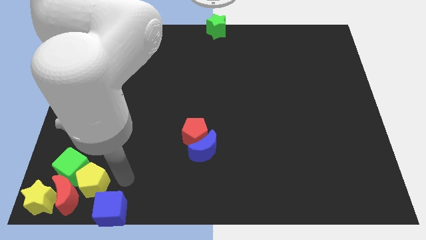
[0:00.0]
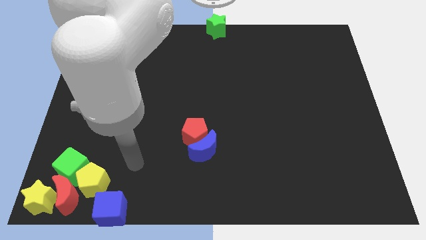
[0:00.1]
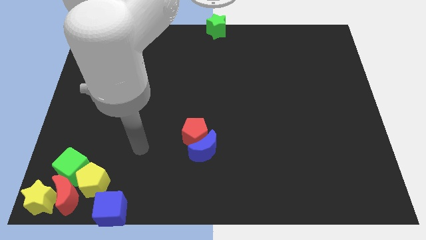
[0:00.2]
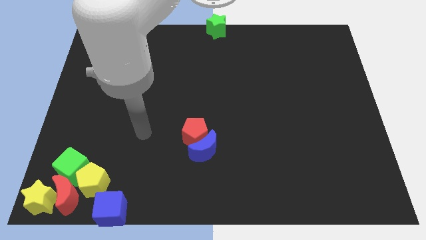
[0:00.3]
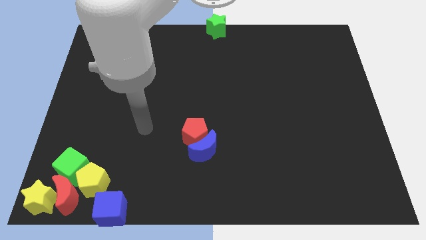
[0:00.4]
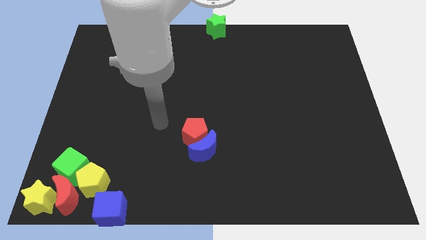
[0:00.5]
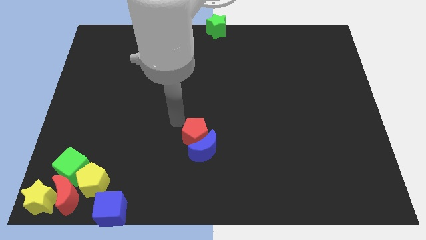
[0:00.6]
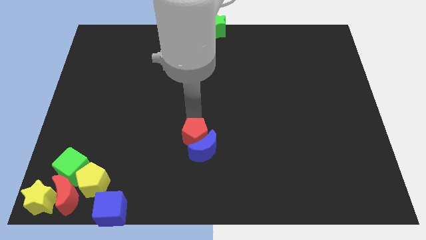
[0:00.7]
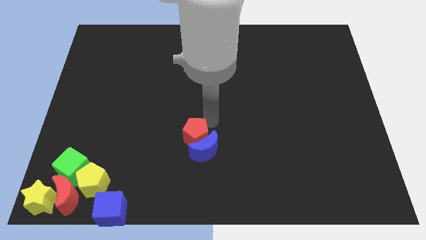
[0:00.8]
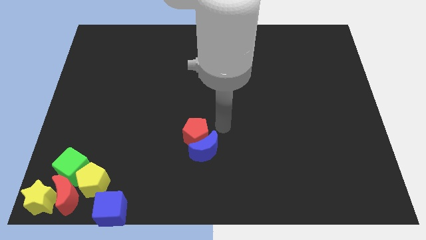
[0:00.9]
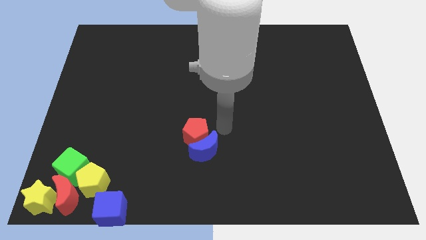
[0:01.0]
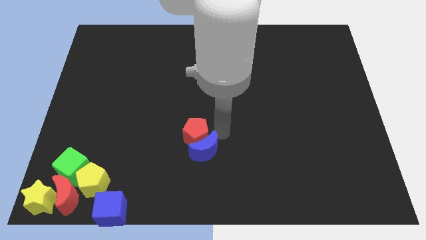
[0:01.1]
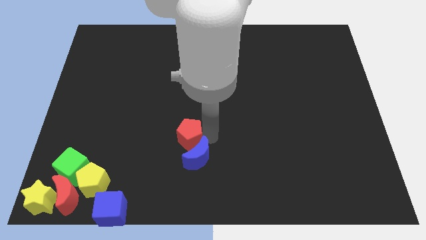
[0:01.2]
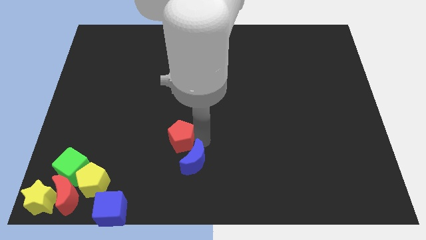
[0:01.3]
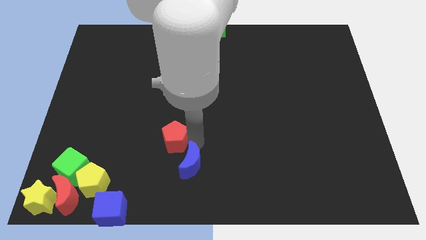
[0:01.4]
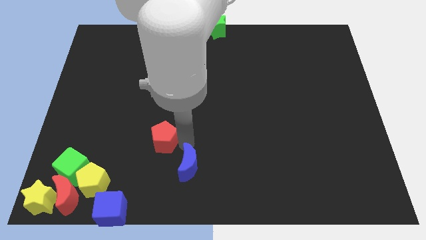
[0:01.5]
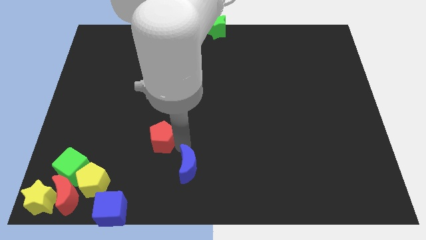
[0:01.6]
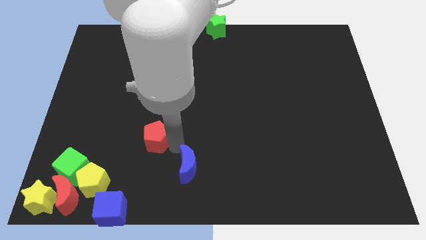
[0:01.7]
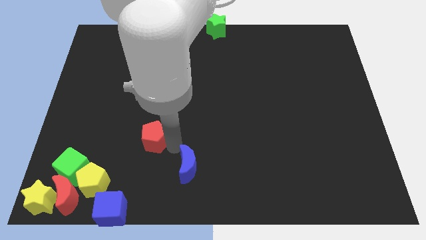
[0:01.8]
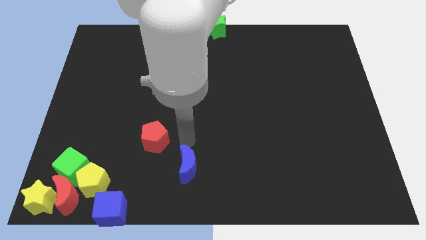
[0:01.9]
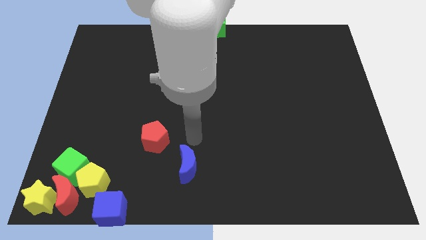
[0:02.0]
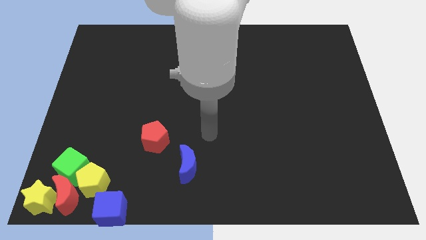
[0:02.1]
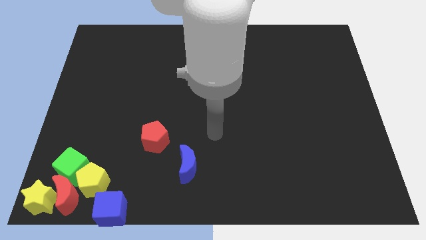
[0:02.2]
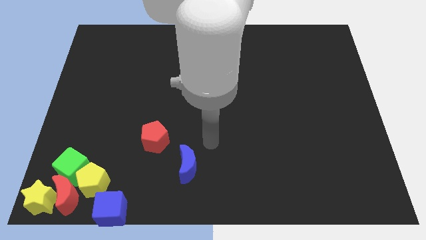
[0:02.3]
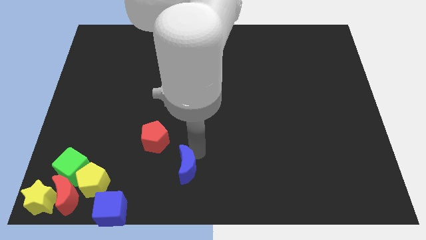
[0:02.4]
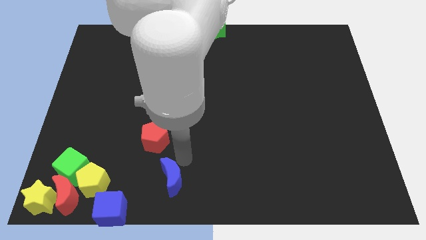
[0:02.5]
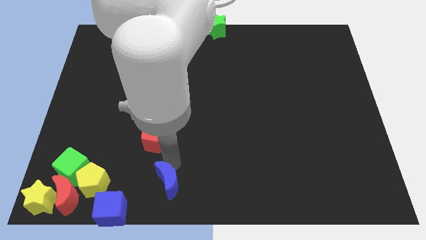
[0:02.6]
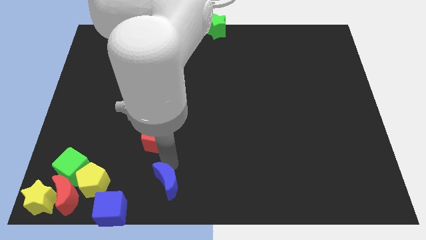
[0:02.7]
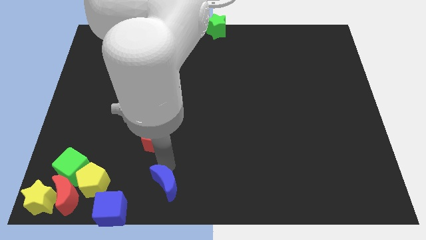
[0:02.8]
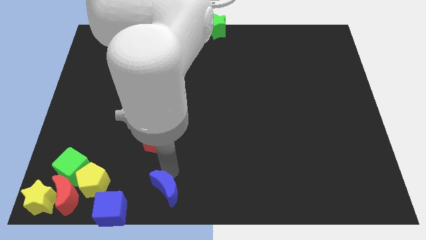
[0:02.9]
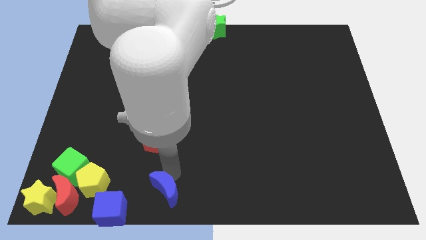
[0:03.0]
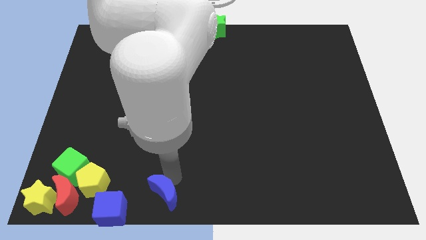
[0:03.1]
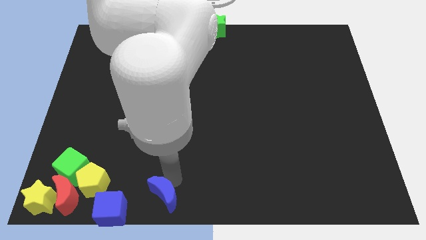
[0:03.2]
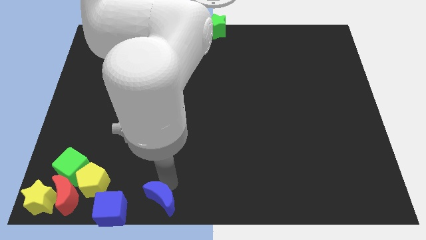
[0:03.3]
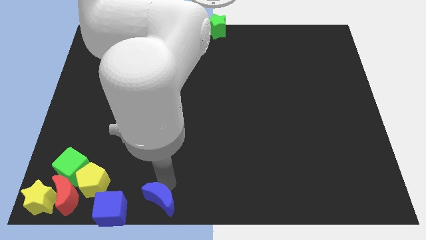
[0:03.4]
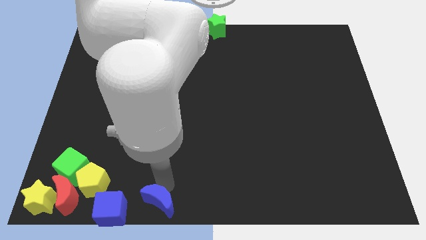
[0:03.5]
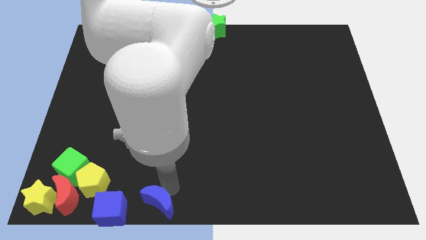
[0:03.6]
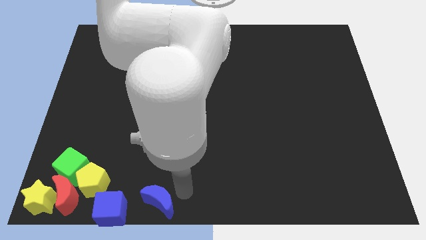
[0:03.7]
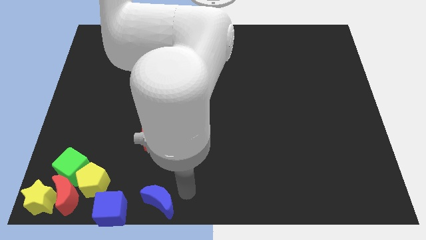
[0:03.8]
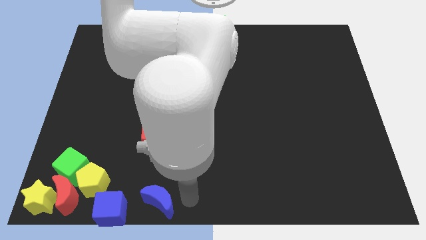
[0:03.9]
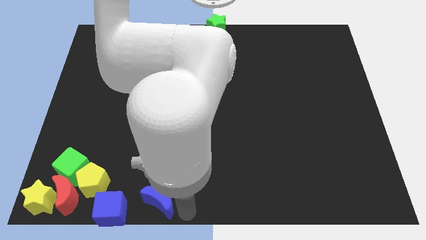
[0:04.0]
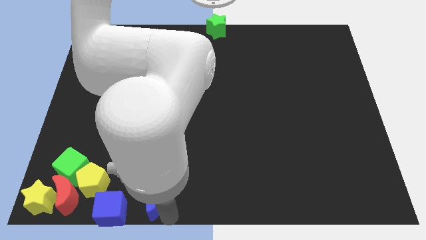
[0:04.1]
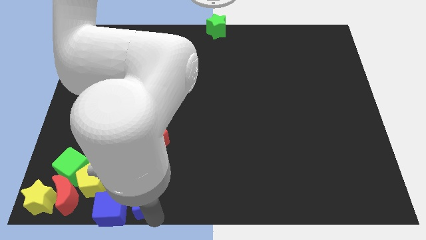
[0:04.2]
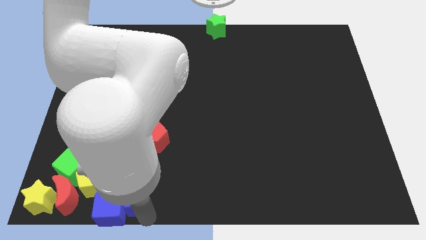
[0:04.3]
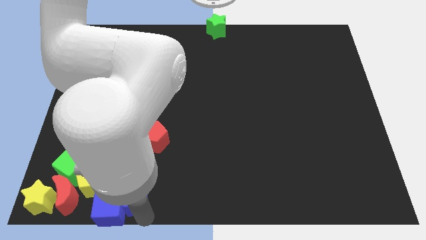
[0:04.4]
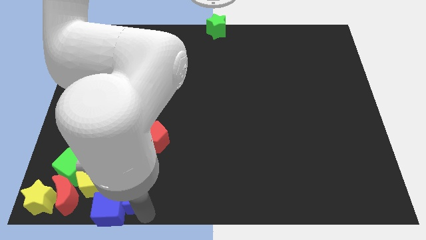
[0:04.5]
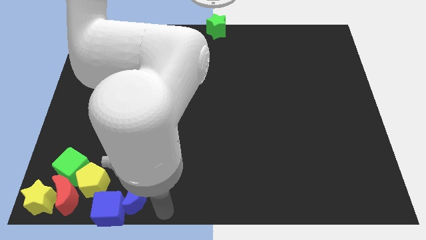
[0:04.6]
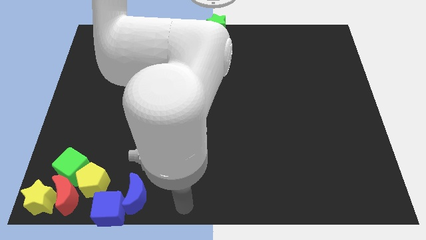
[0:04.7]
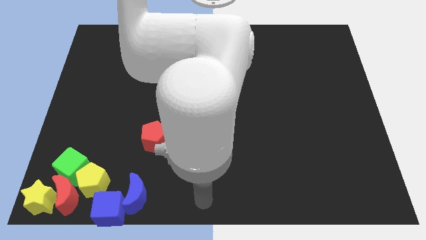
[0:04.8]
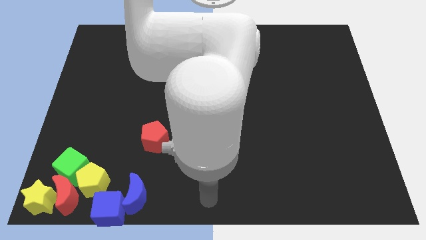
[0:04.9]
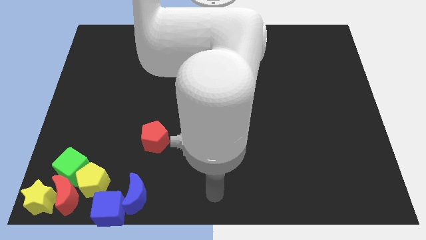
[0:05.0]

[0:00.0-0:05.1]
push the blue crescent into the blue cube

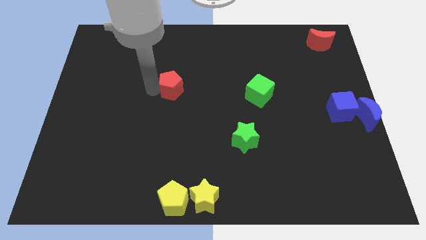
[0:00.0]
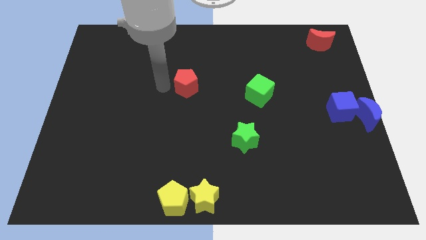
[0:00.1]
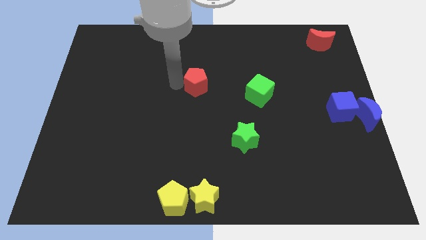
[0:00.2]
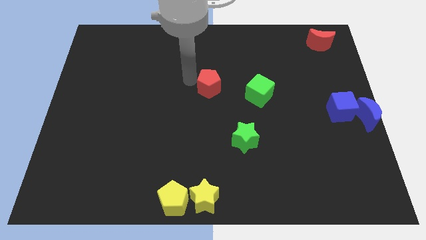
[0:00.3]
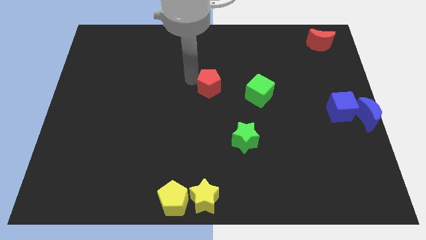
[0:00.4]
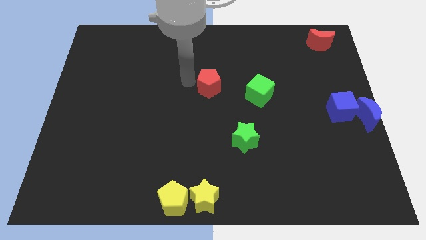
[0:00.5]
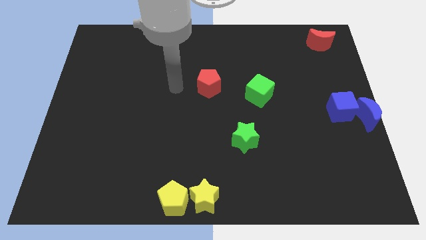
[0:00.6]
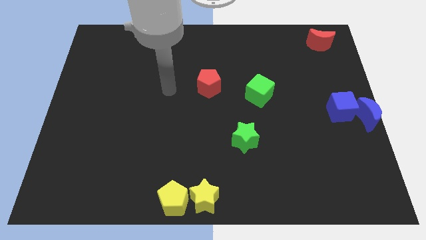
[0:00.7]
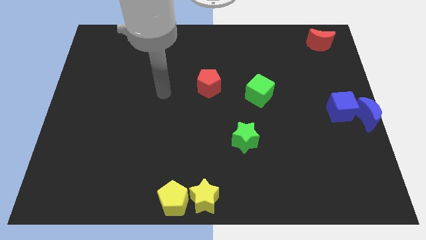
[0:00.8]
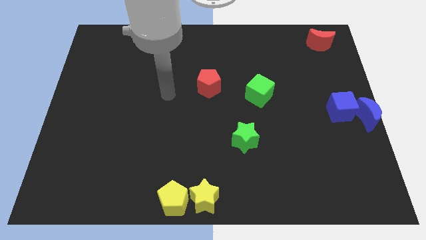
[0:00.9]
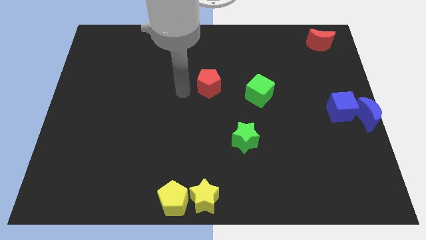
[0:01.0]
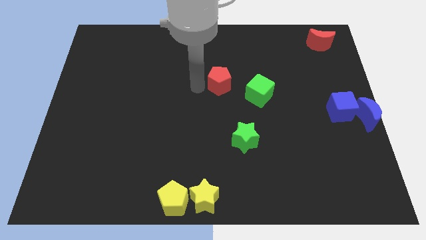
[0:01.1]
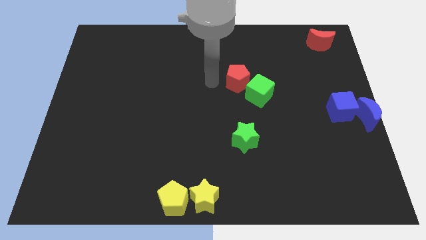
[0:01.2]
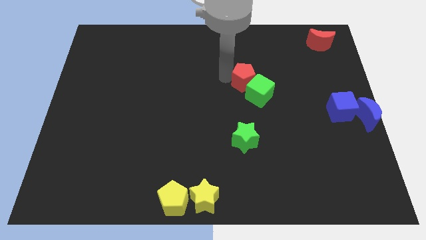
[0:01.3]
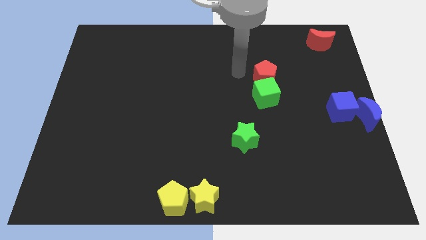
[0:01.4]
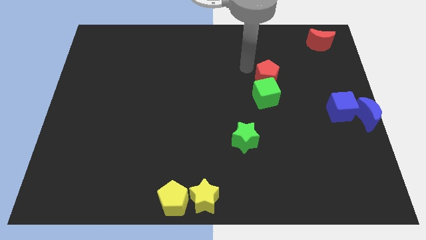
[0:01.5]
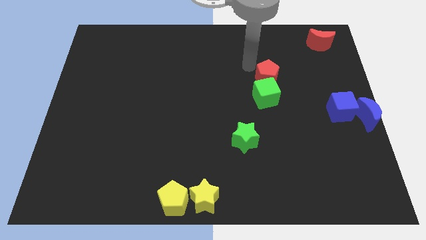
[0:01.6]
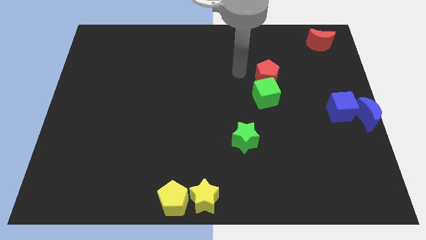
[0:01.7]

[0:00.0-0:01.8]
move the red pentagon into the green cube

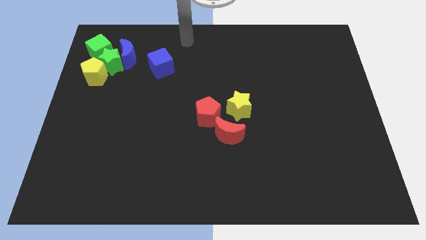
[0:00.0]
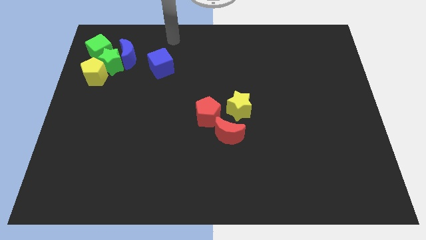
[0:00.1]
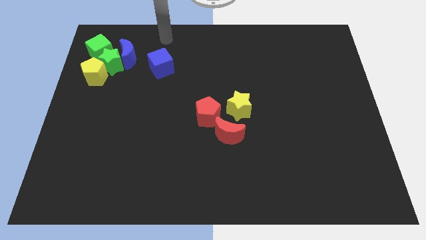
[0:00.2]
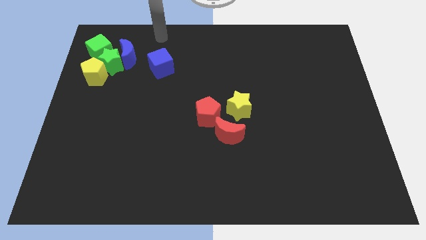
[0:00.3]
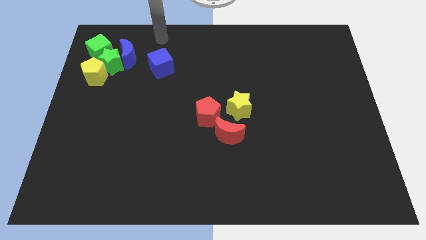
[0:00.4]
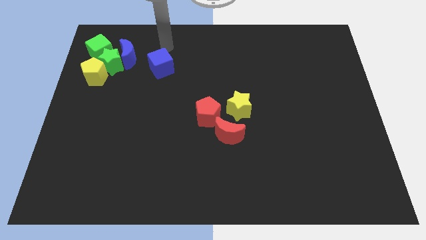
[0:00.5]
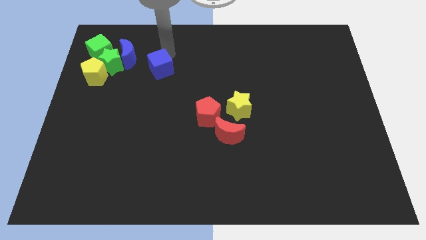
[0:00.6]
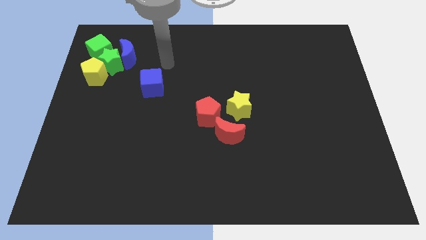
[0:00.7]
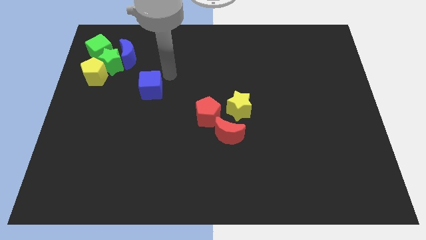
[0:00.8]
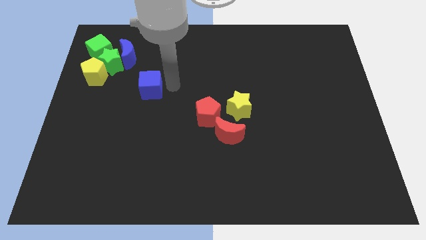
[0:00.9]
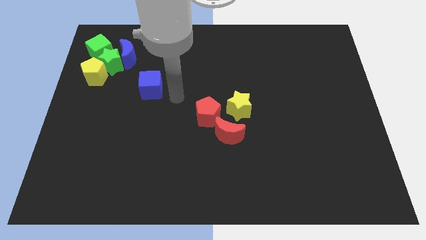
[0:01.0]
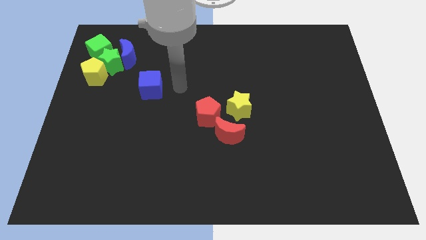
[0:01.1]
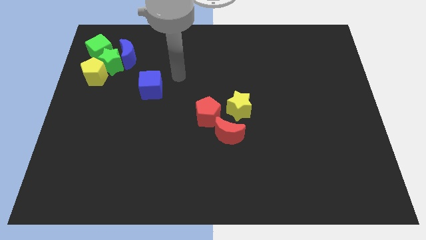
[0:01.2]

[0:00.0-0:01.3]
move the blue cube slightly to the bottom of the board

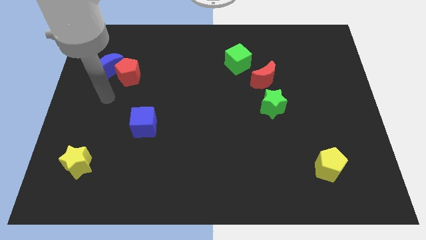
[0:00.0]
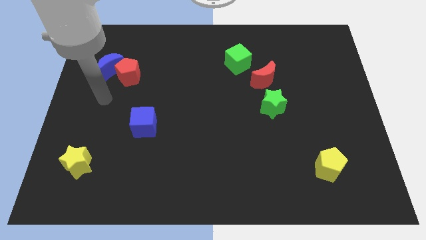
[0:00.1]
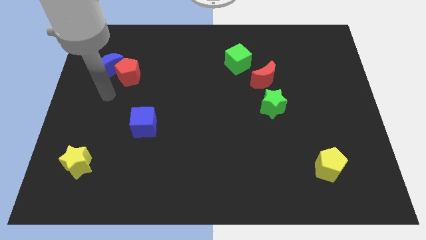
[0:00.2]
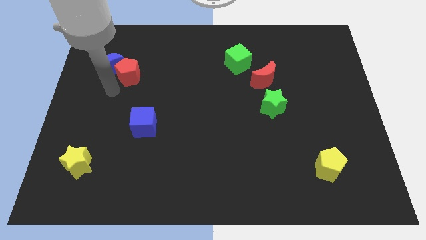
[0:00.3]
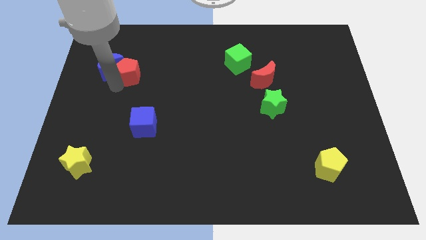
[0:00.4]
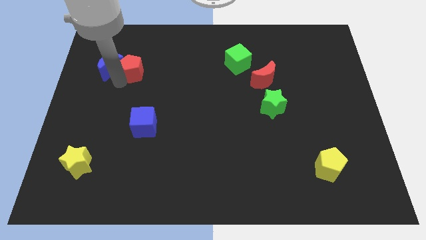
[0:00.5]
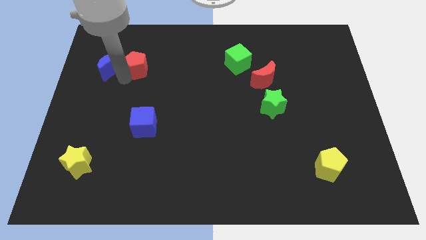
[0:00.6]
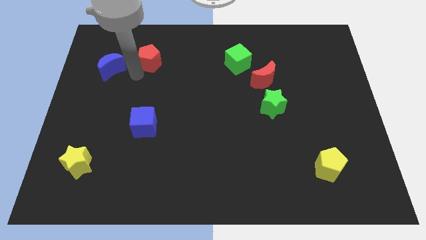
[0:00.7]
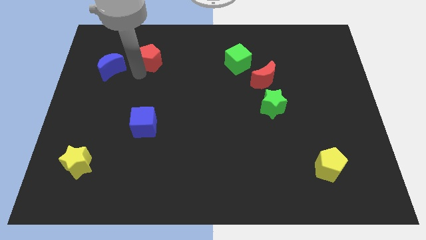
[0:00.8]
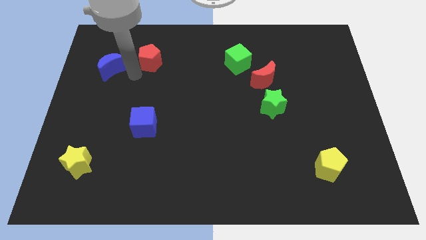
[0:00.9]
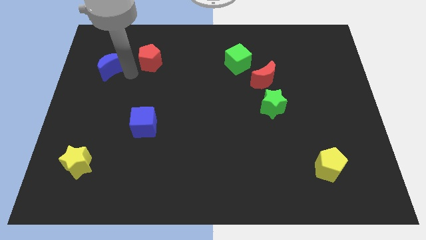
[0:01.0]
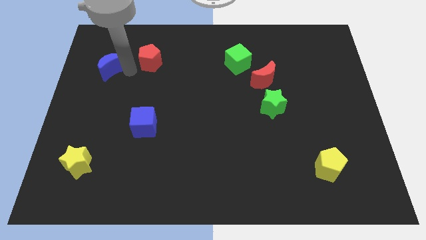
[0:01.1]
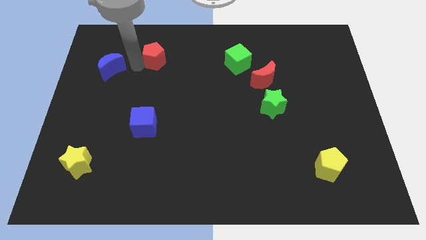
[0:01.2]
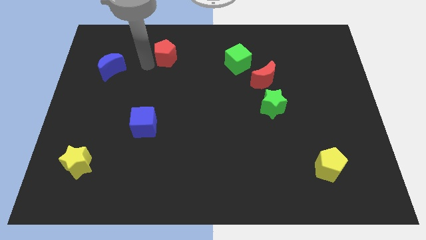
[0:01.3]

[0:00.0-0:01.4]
place the red pentagon above the blue cube
